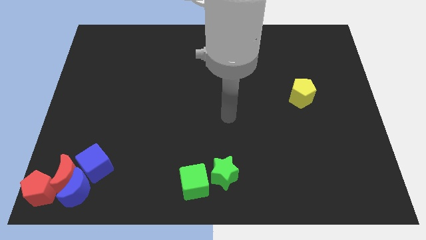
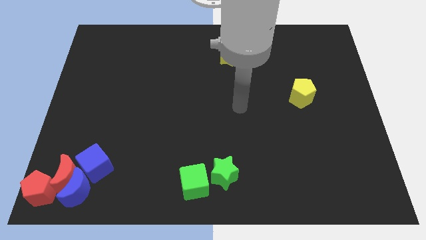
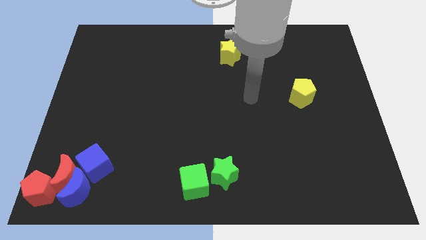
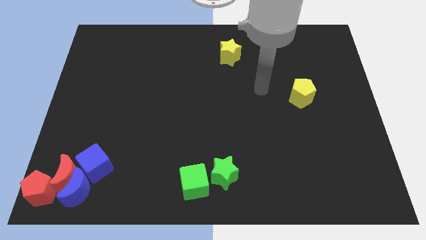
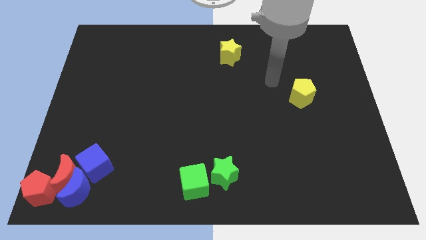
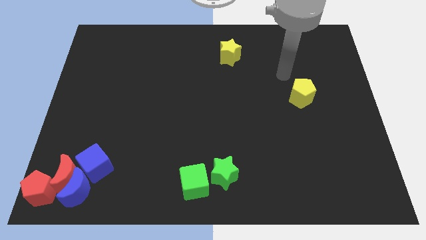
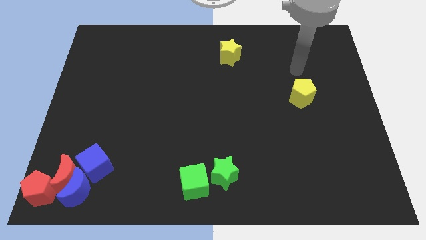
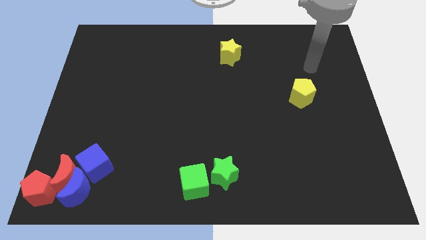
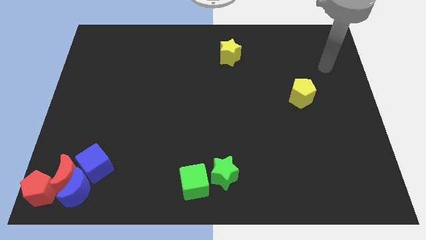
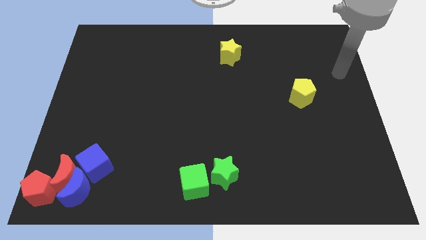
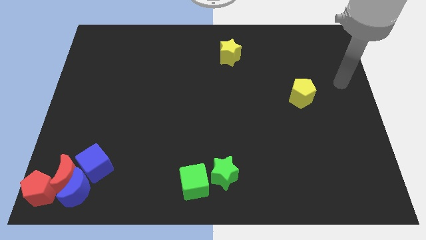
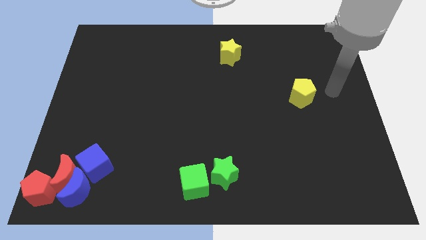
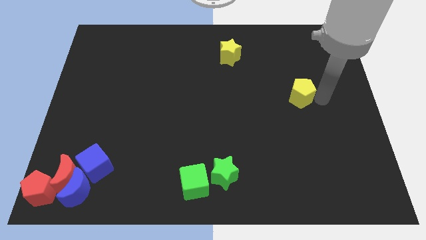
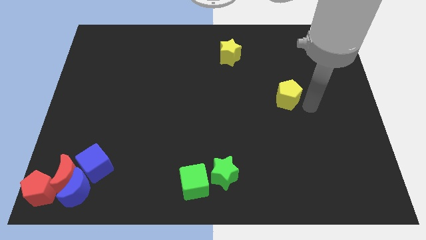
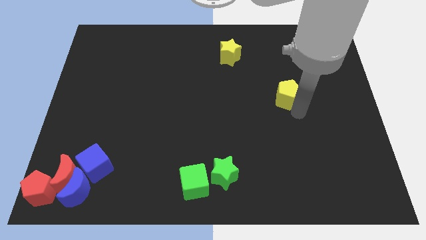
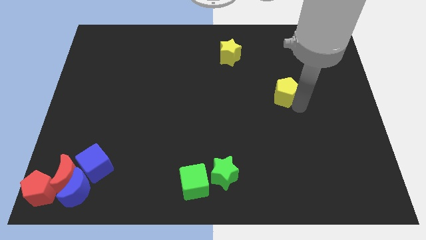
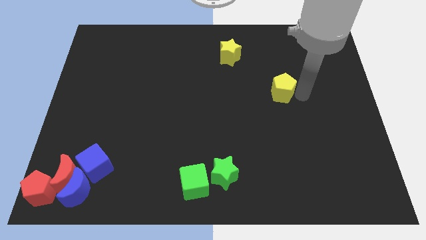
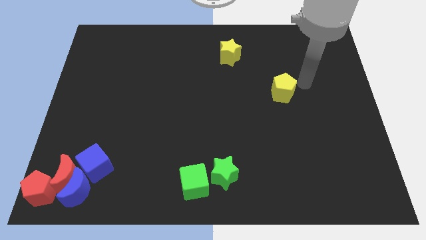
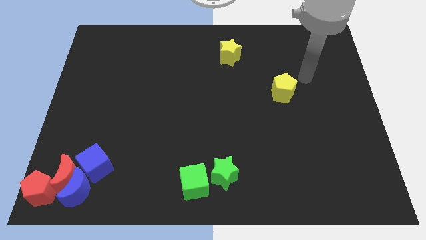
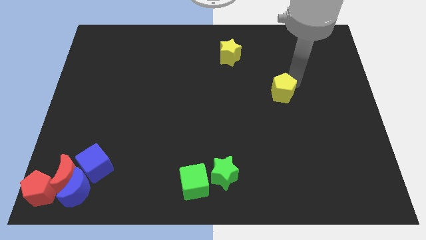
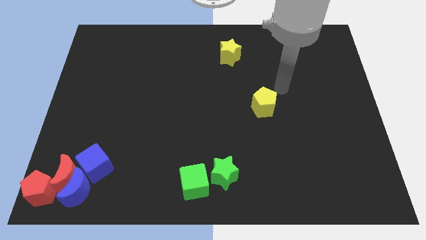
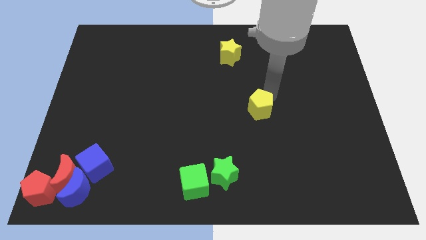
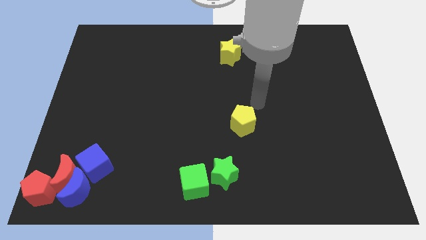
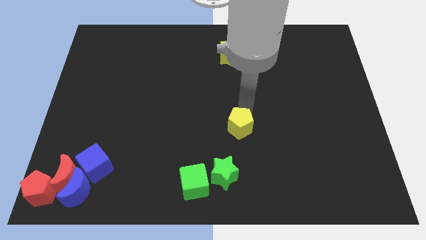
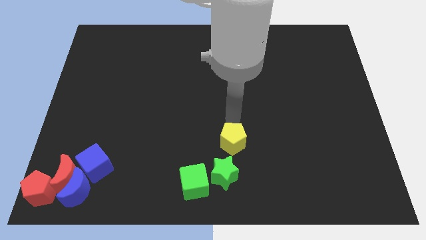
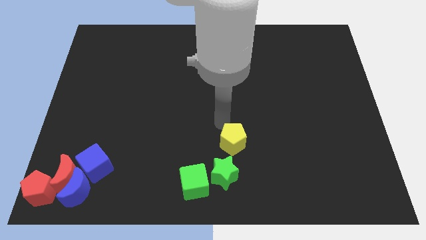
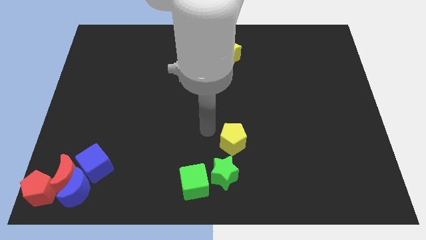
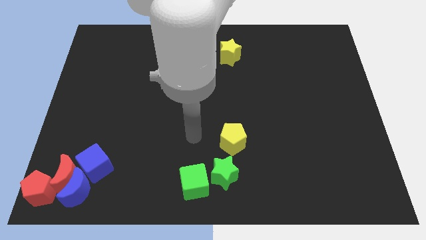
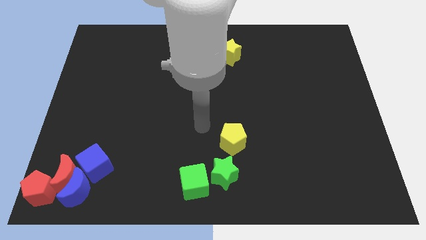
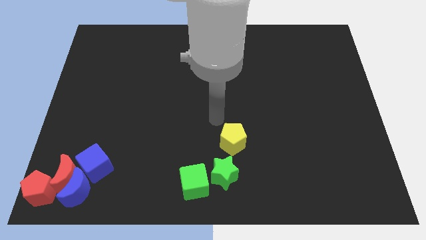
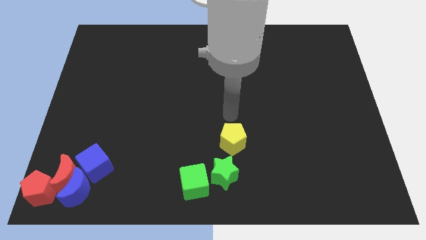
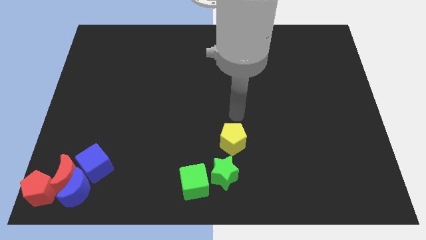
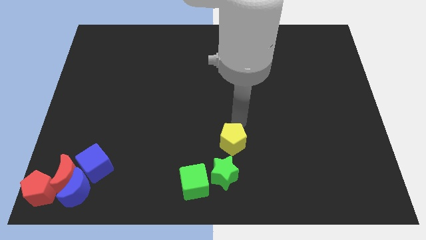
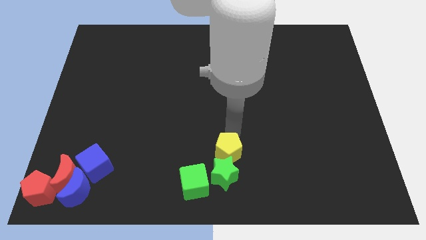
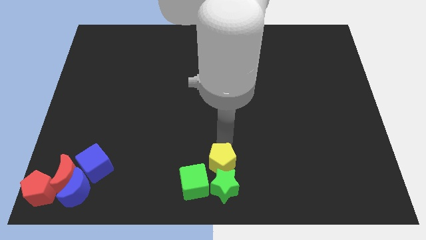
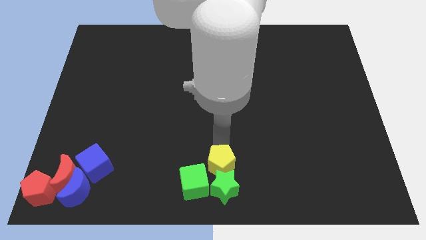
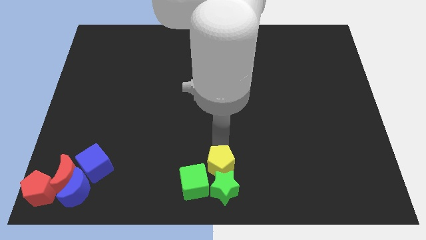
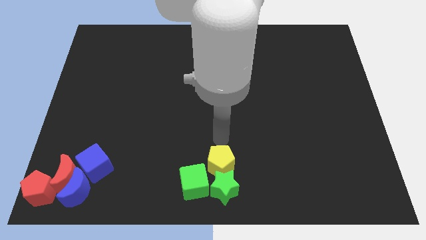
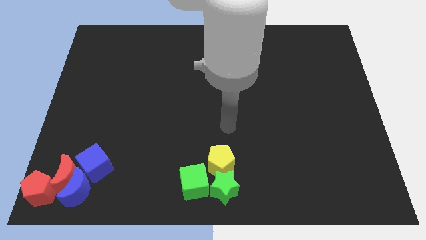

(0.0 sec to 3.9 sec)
push the yellow pentagon into the green star

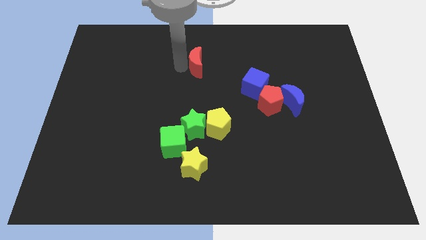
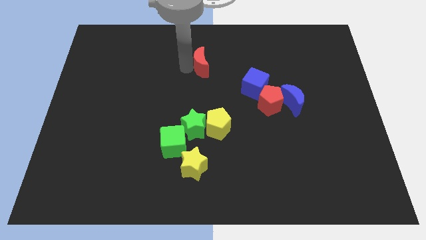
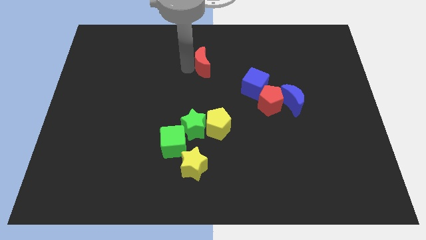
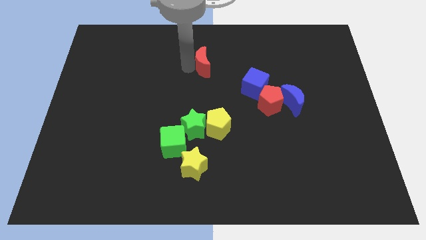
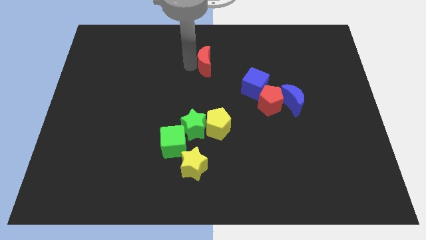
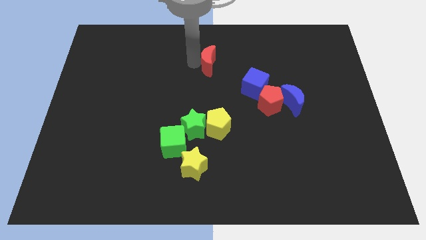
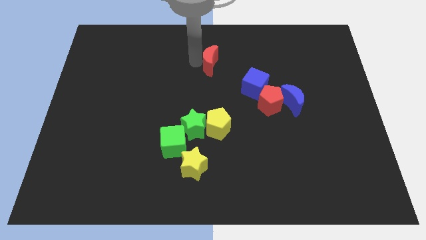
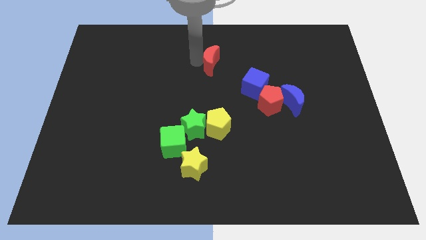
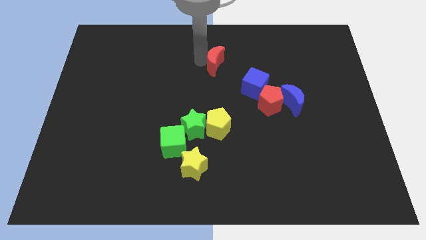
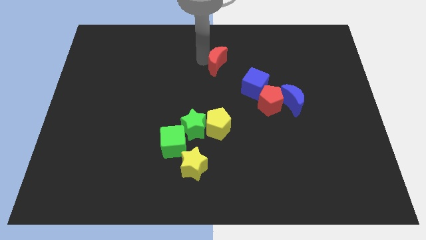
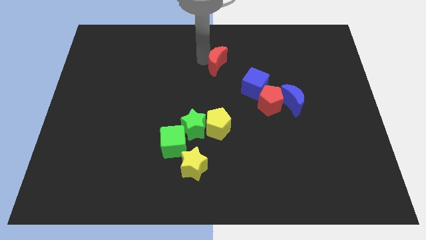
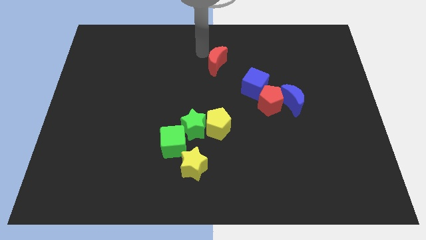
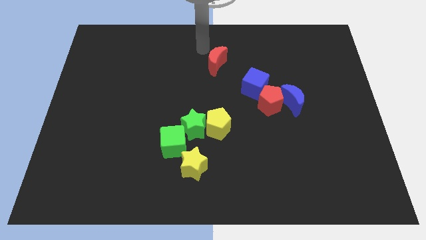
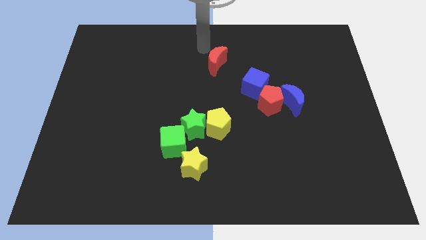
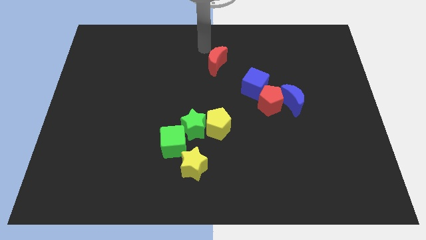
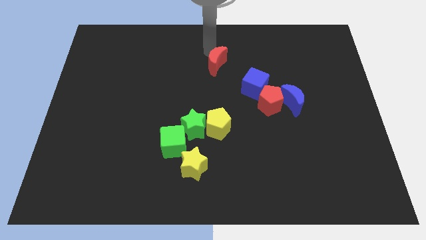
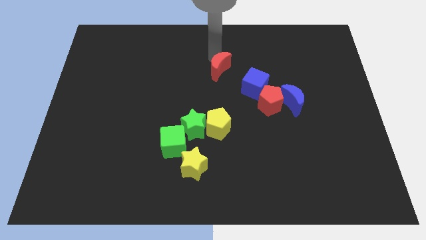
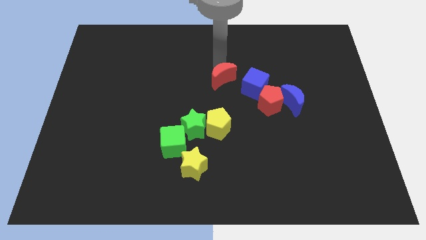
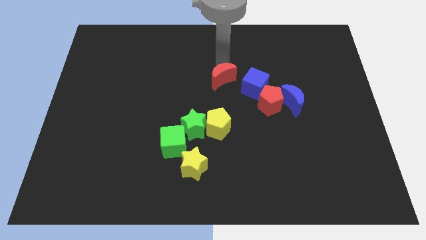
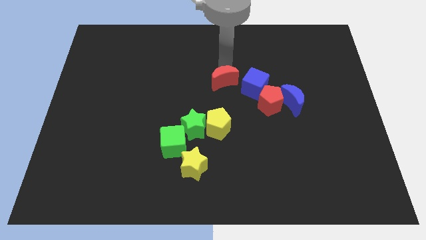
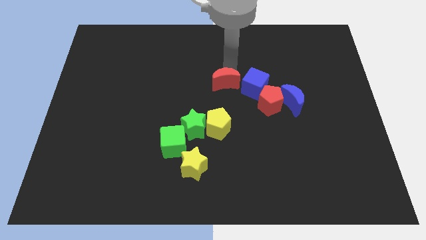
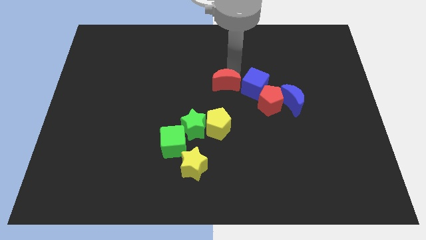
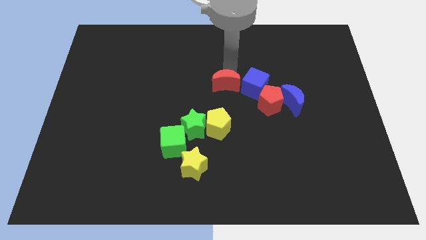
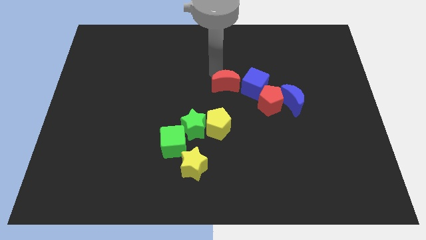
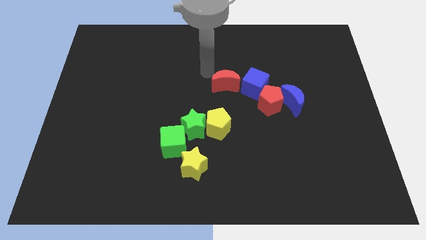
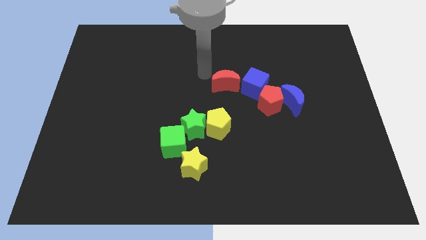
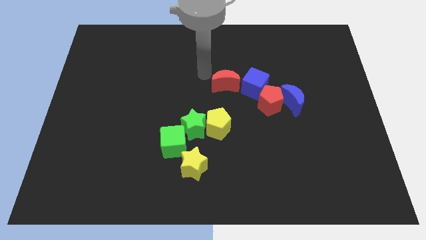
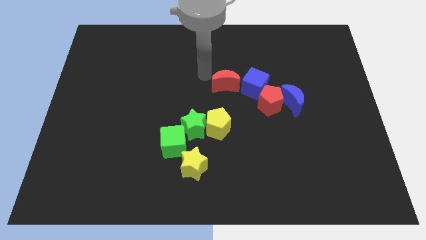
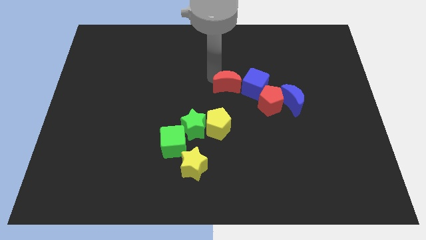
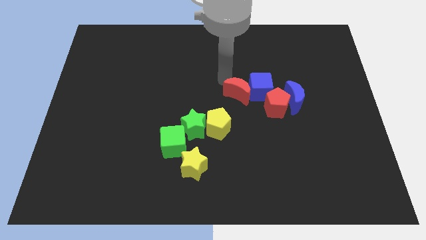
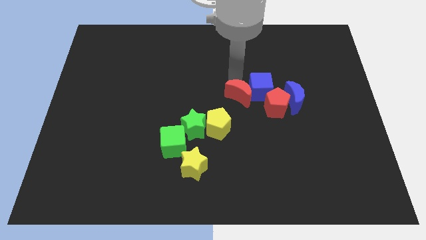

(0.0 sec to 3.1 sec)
push the red moon into the blue cube

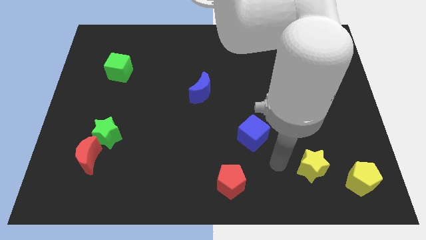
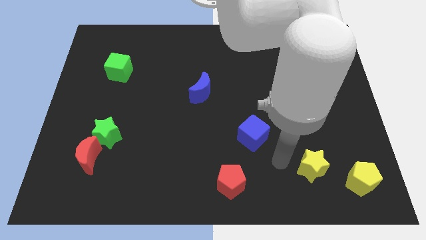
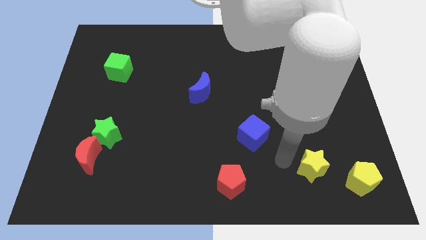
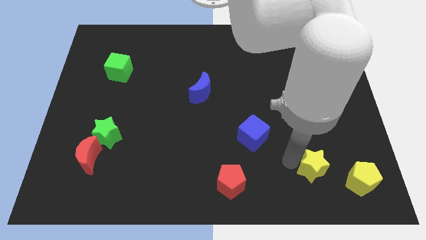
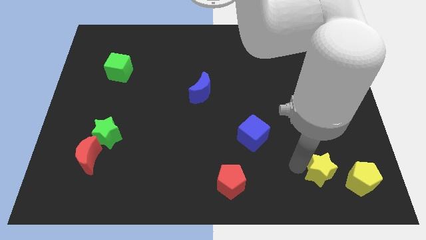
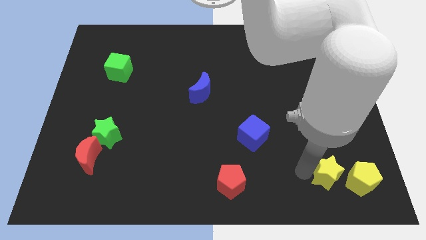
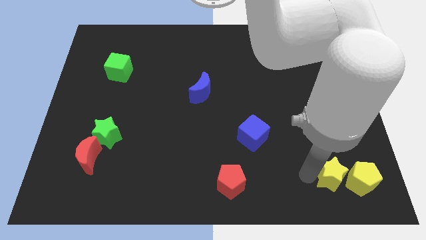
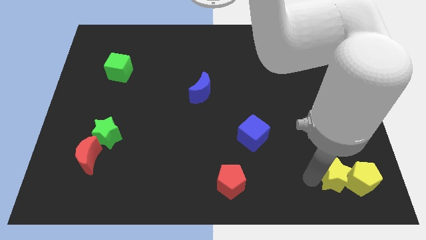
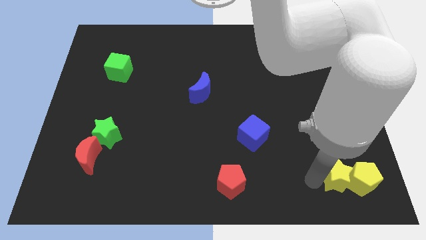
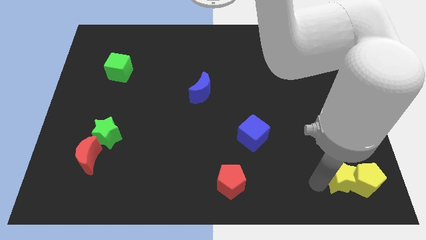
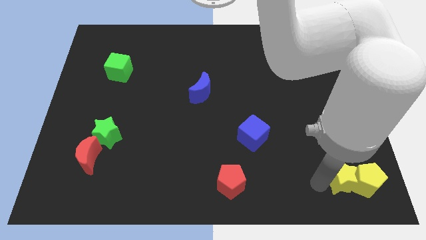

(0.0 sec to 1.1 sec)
move yellow star close to the yellow pentagon

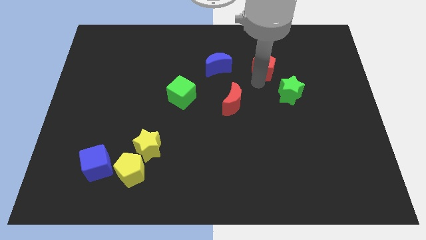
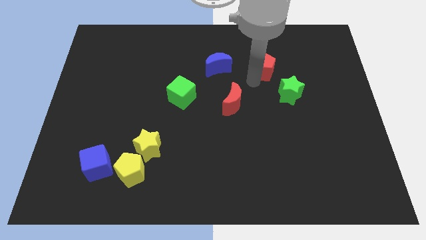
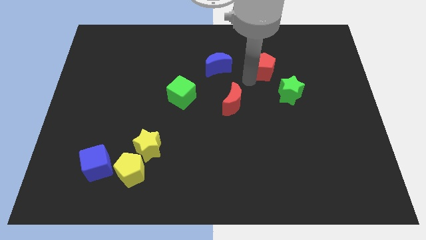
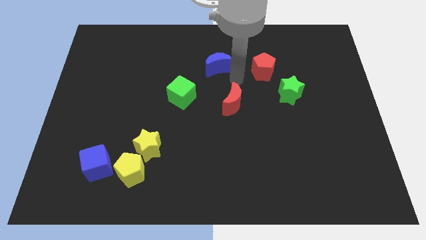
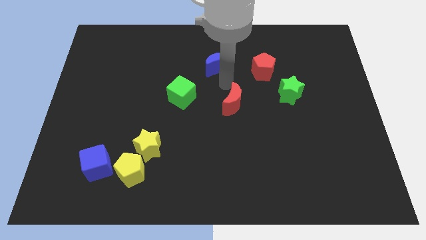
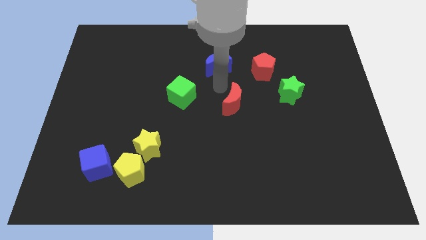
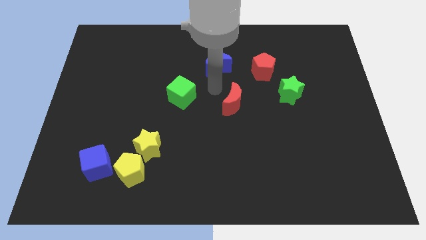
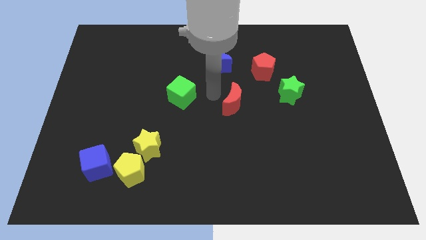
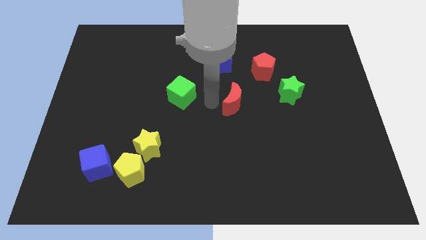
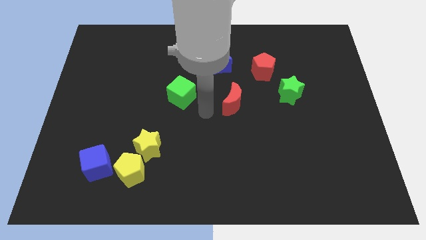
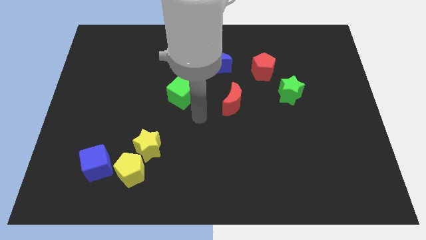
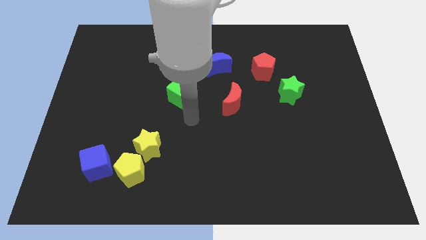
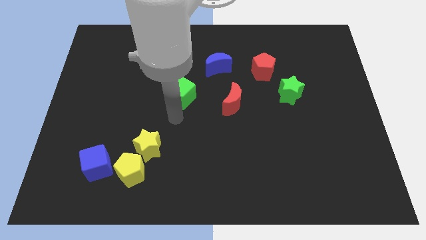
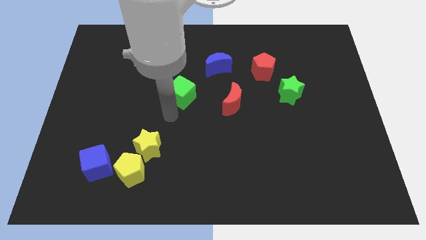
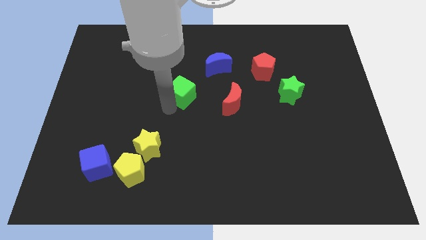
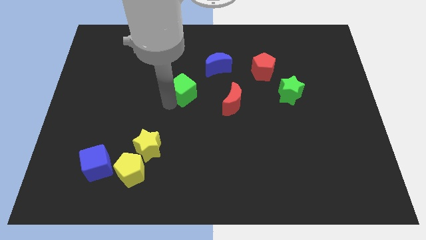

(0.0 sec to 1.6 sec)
place the arm diagonally to the green cube
